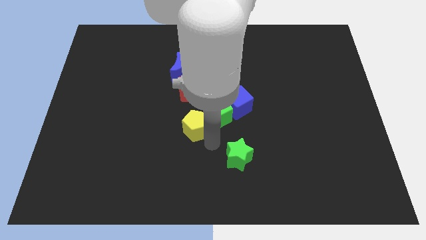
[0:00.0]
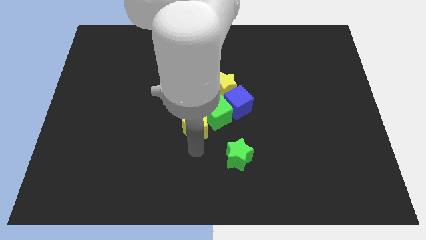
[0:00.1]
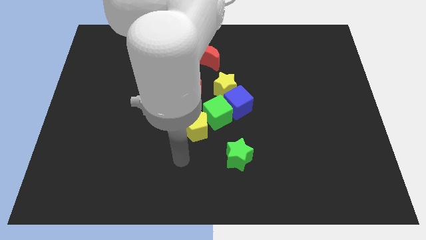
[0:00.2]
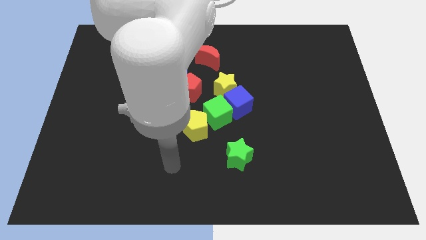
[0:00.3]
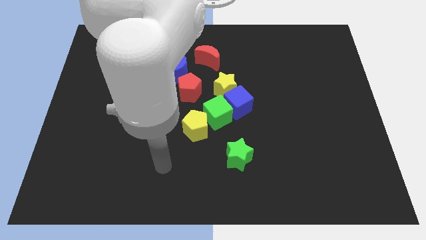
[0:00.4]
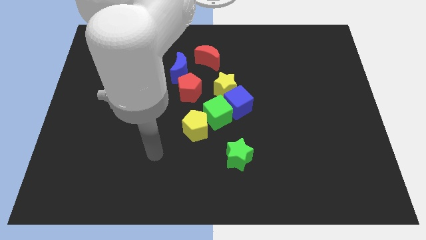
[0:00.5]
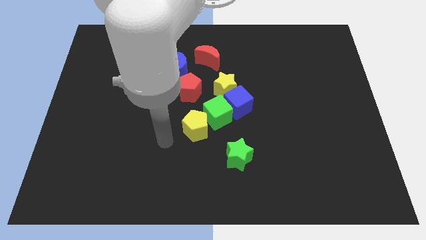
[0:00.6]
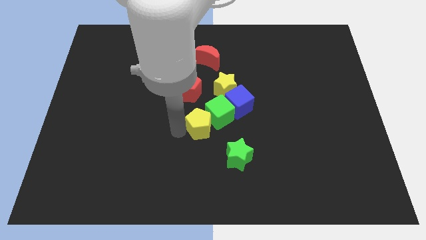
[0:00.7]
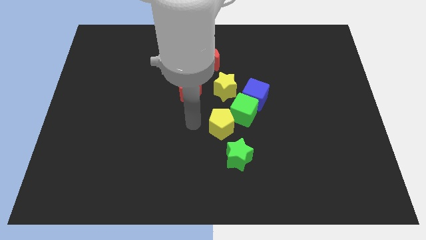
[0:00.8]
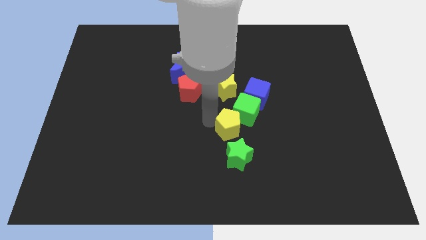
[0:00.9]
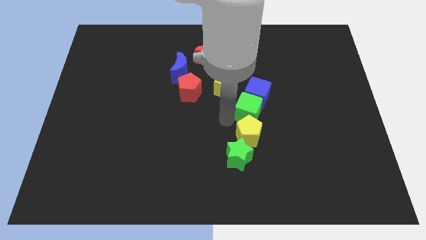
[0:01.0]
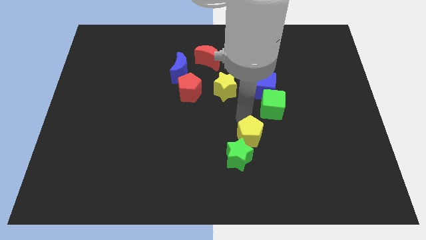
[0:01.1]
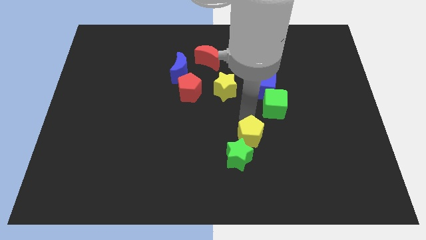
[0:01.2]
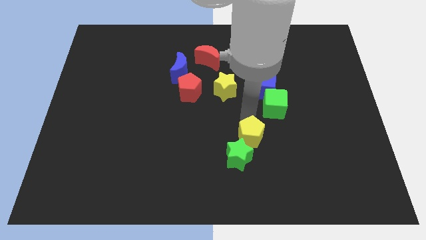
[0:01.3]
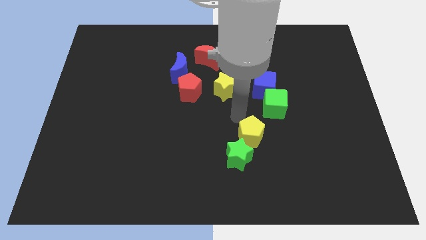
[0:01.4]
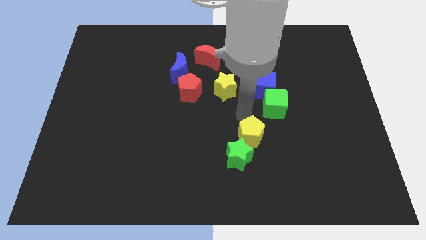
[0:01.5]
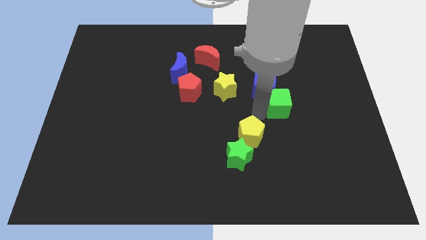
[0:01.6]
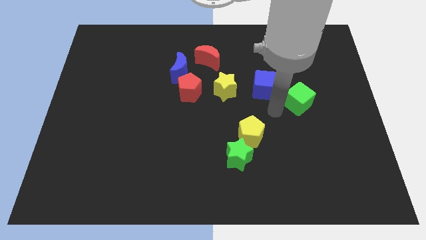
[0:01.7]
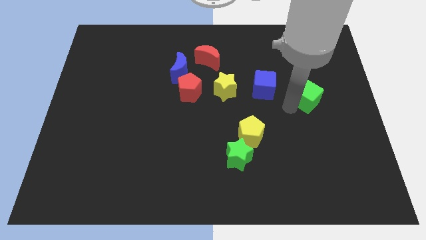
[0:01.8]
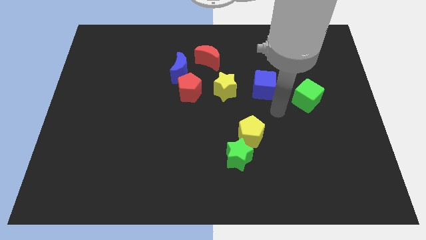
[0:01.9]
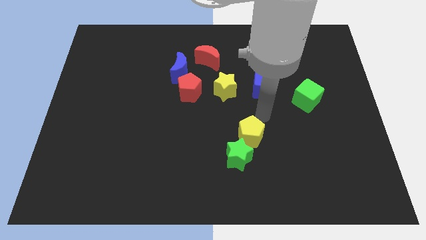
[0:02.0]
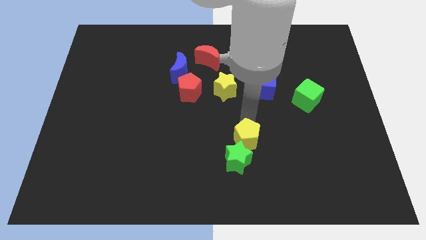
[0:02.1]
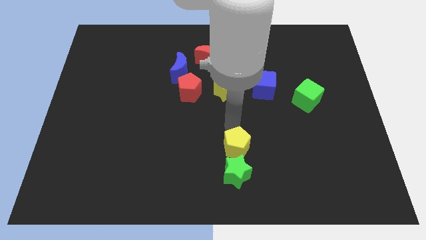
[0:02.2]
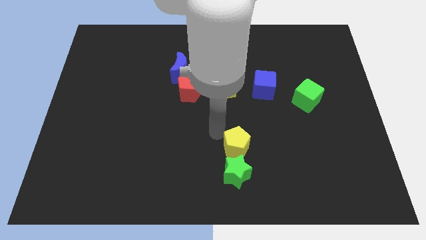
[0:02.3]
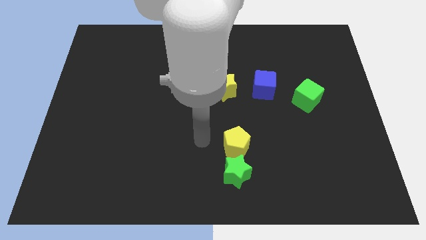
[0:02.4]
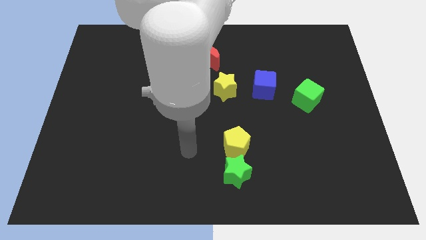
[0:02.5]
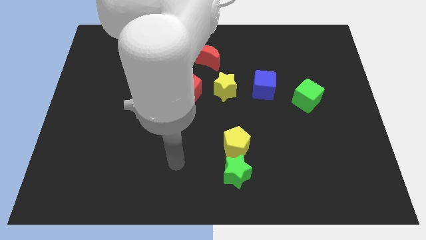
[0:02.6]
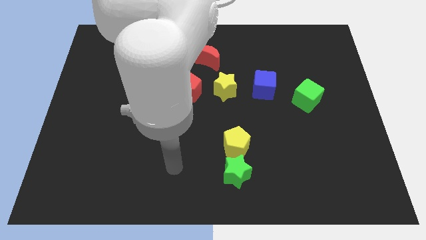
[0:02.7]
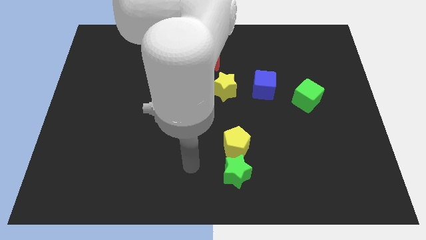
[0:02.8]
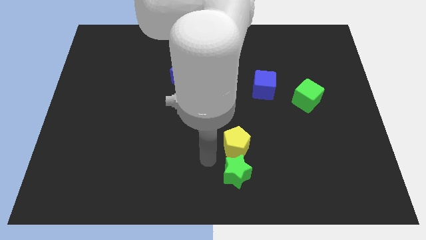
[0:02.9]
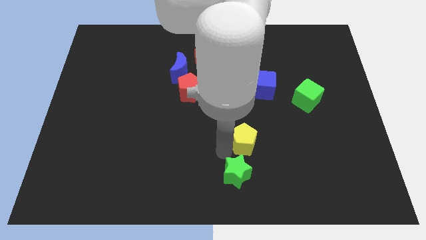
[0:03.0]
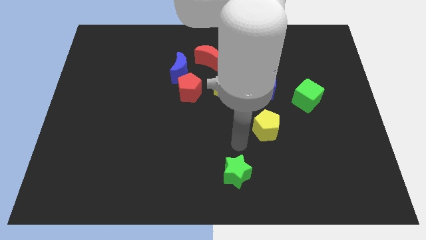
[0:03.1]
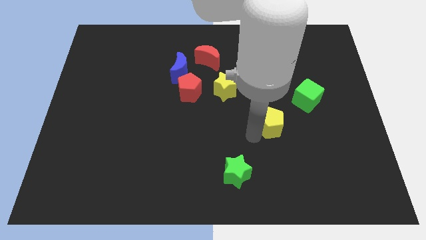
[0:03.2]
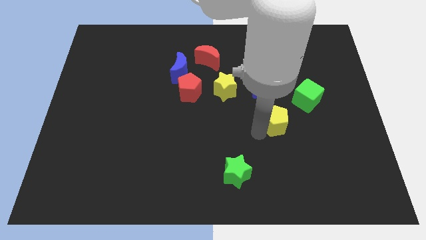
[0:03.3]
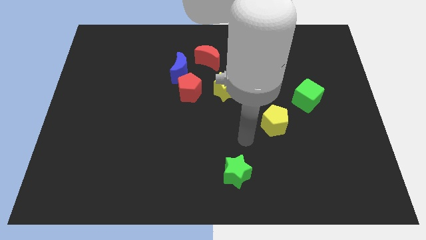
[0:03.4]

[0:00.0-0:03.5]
separate the green cube and blue cube

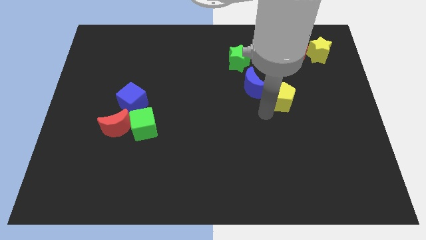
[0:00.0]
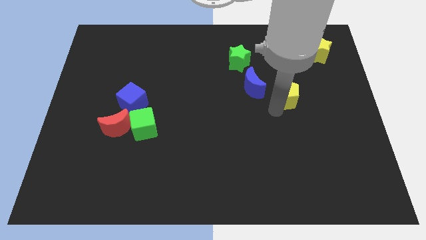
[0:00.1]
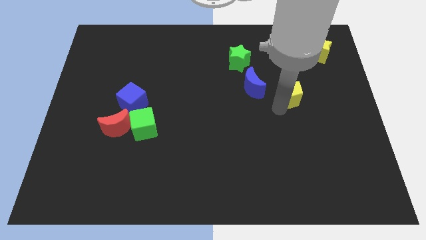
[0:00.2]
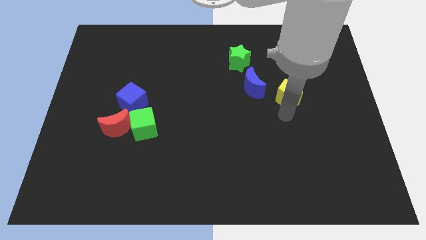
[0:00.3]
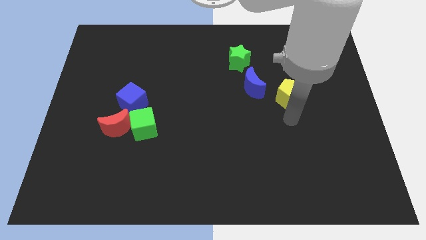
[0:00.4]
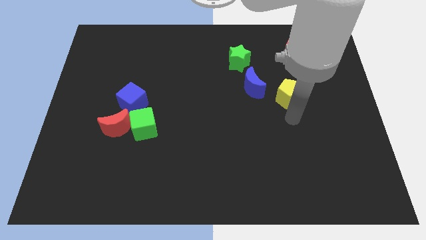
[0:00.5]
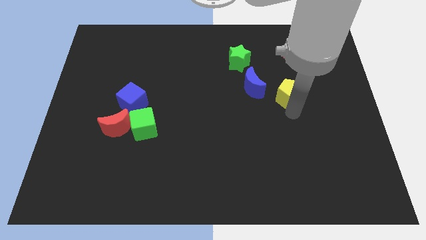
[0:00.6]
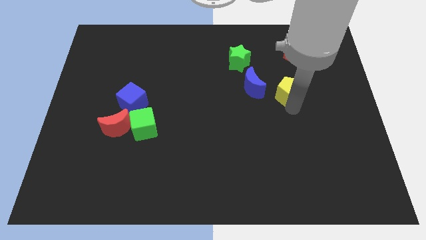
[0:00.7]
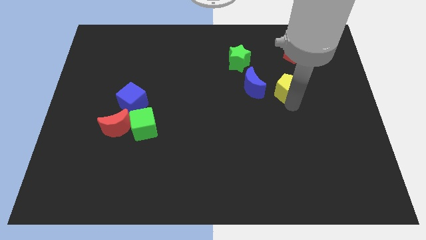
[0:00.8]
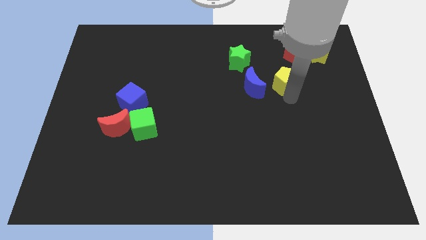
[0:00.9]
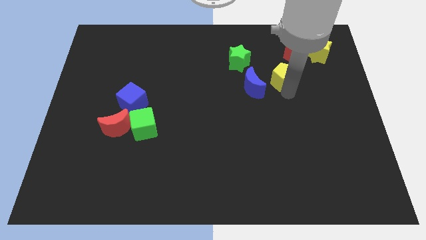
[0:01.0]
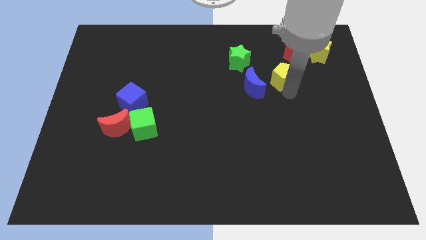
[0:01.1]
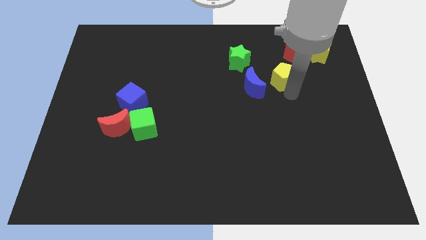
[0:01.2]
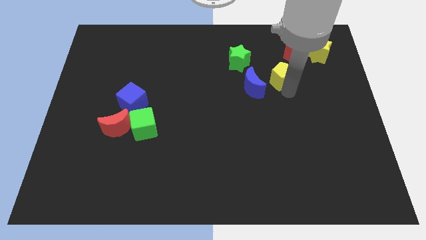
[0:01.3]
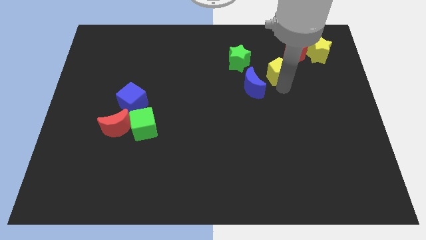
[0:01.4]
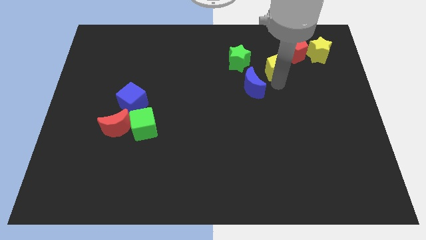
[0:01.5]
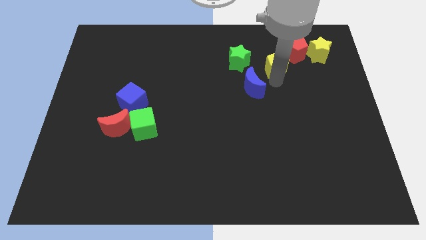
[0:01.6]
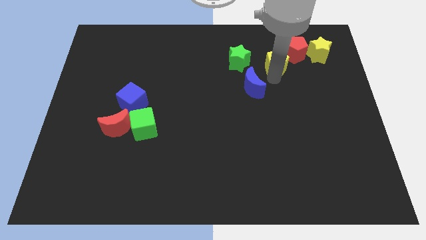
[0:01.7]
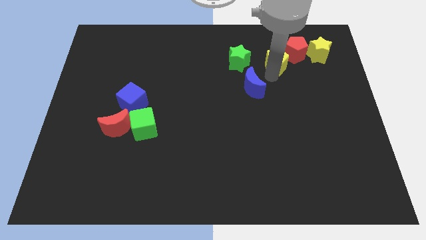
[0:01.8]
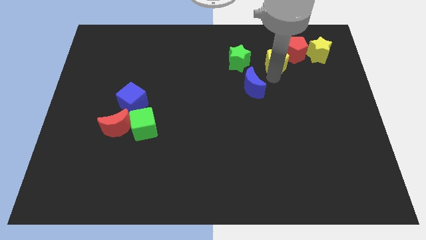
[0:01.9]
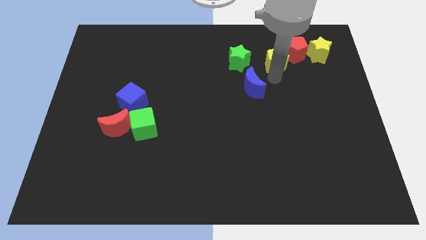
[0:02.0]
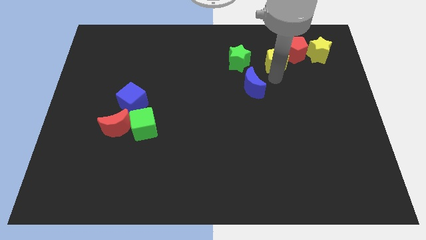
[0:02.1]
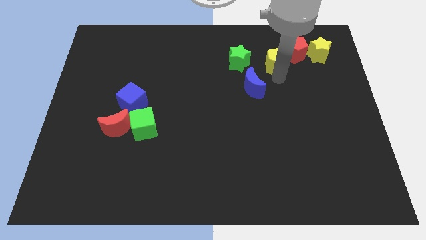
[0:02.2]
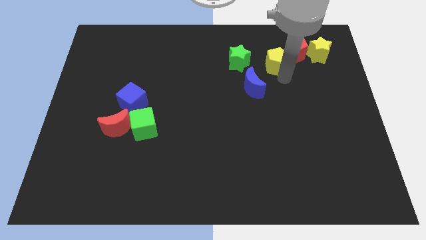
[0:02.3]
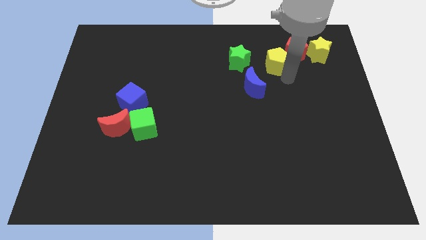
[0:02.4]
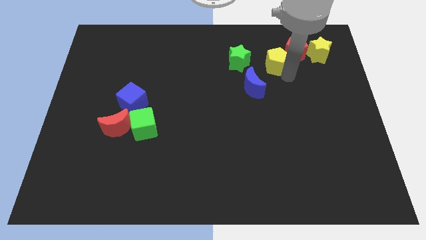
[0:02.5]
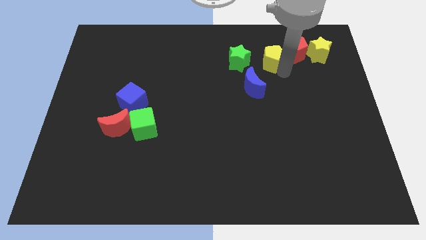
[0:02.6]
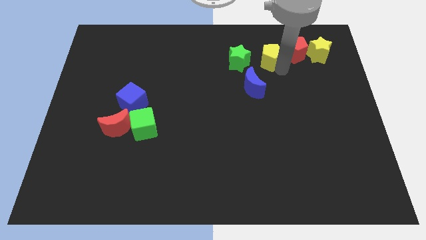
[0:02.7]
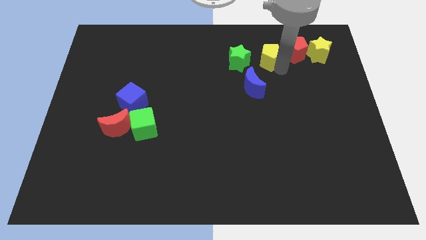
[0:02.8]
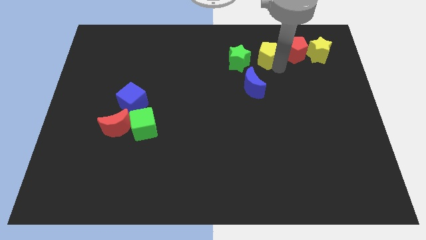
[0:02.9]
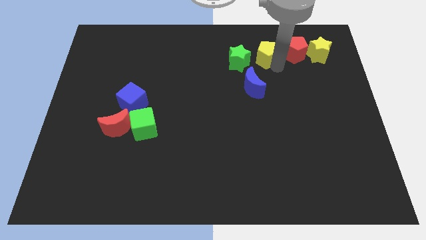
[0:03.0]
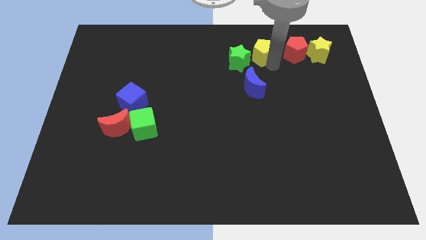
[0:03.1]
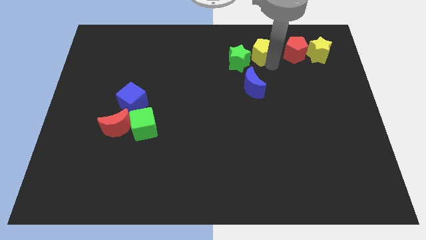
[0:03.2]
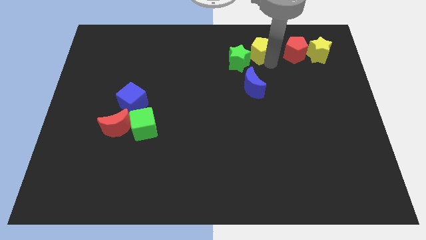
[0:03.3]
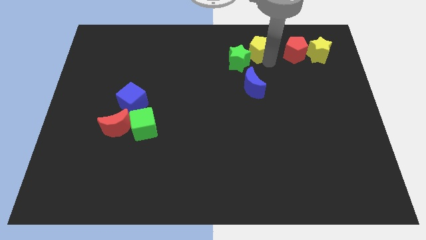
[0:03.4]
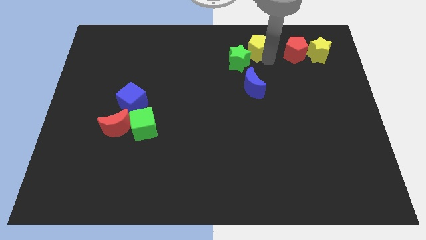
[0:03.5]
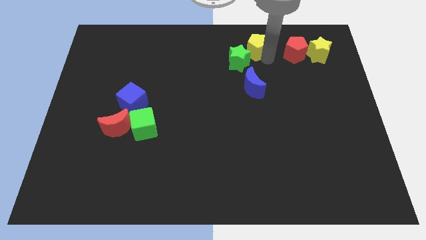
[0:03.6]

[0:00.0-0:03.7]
move yellow pentagon to the left of red pentagon

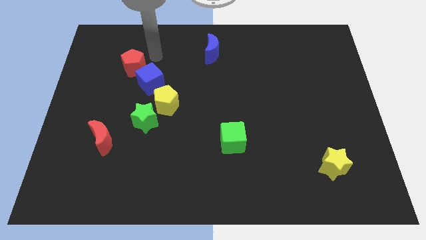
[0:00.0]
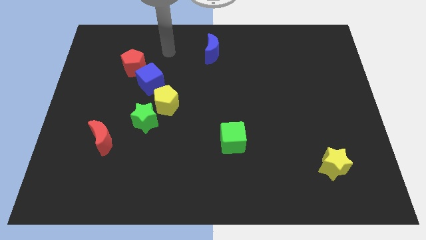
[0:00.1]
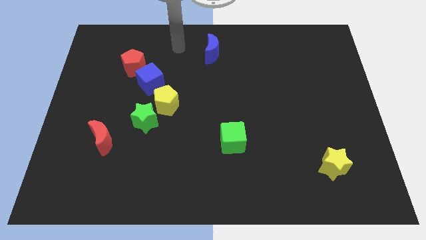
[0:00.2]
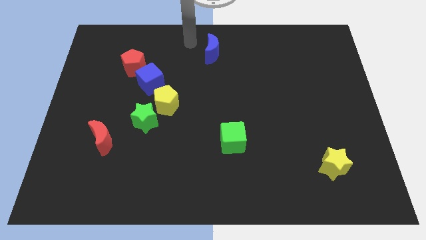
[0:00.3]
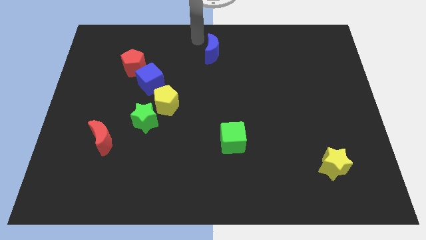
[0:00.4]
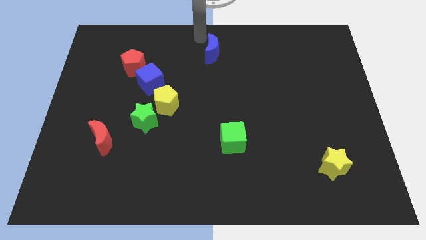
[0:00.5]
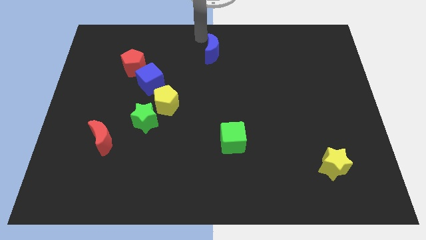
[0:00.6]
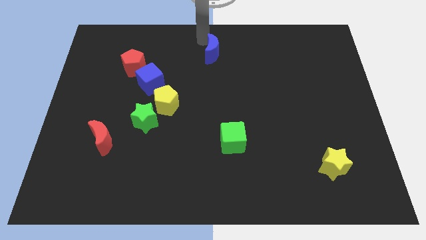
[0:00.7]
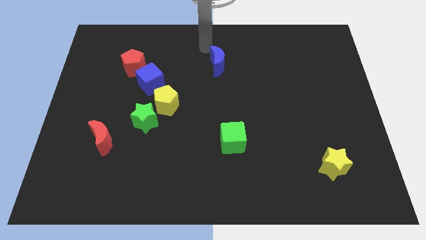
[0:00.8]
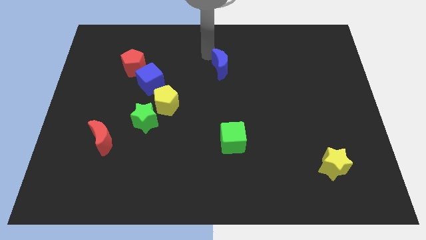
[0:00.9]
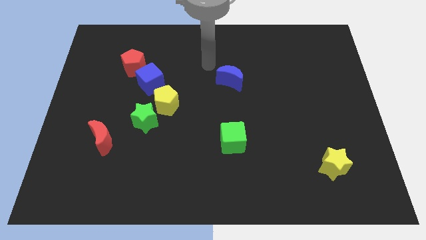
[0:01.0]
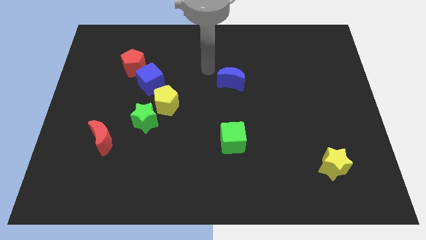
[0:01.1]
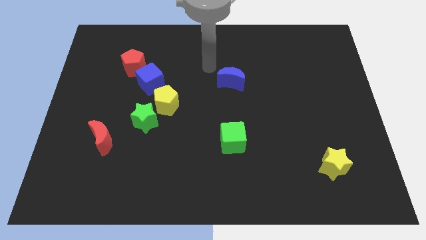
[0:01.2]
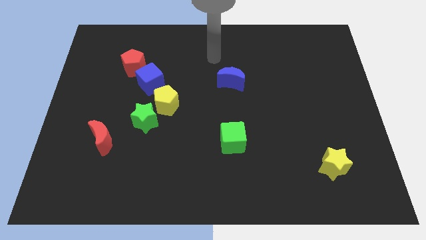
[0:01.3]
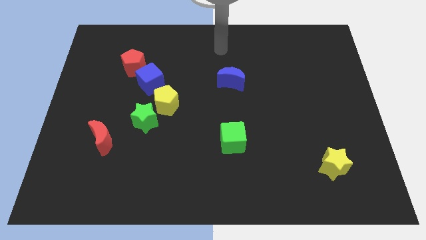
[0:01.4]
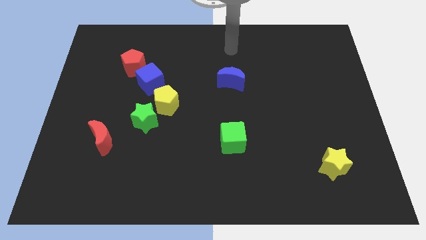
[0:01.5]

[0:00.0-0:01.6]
move the blue crescent towards the center of the board

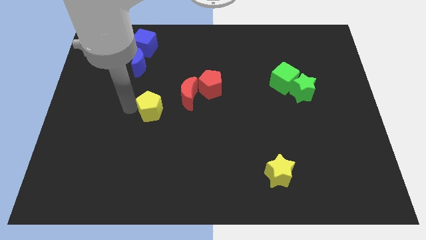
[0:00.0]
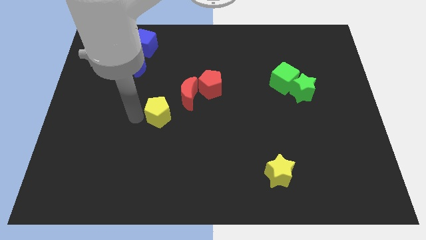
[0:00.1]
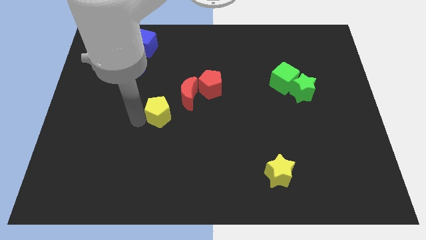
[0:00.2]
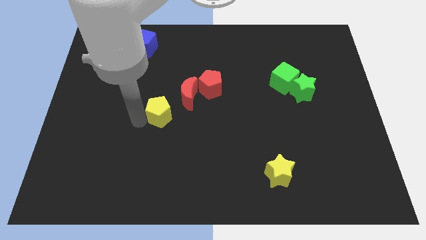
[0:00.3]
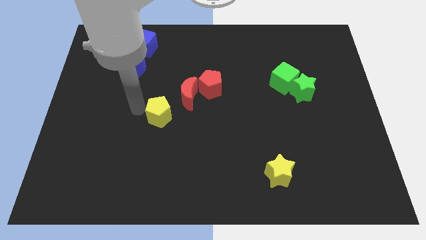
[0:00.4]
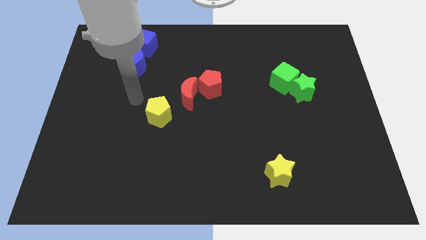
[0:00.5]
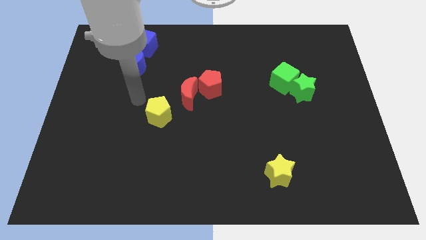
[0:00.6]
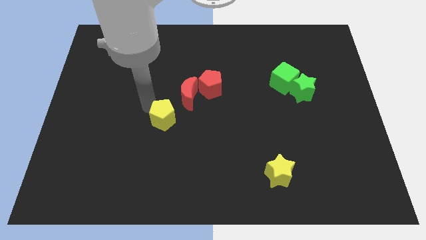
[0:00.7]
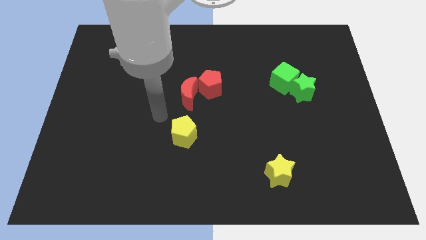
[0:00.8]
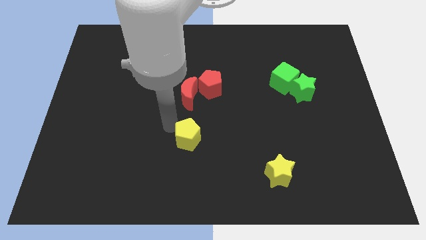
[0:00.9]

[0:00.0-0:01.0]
push the yellow pentagon under the red crescent
